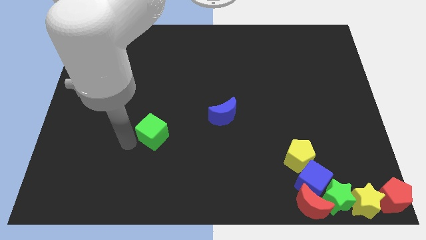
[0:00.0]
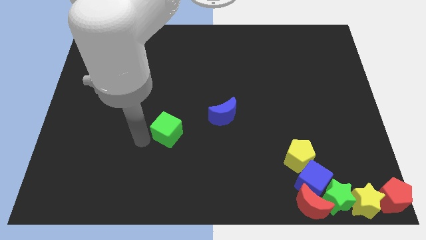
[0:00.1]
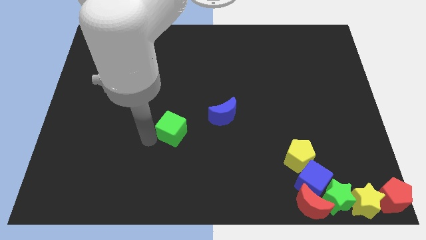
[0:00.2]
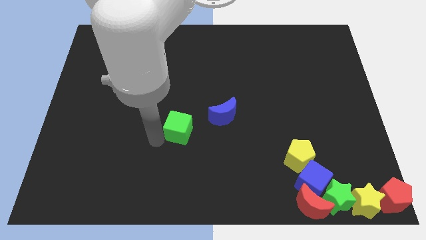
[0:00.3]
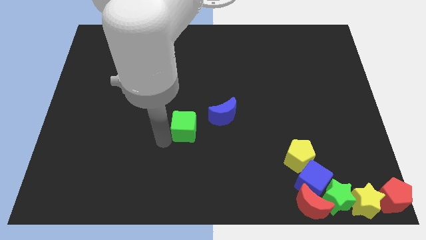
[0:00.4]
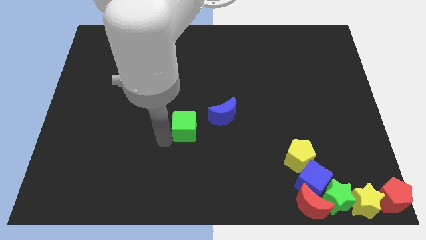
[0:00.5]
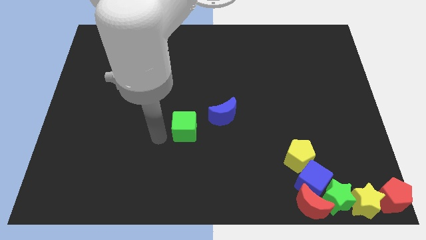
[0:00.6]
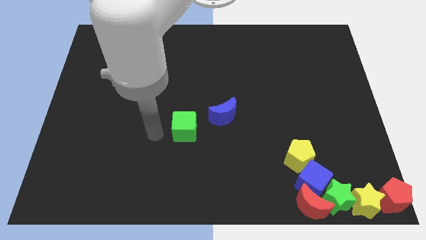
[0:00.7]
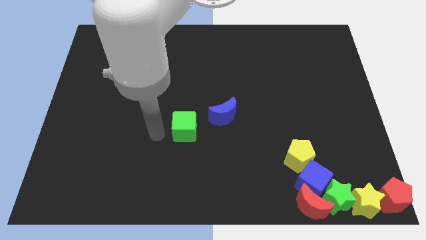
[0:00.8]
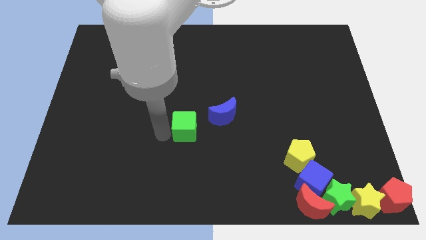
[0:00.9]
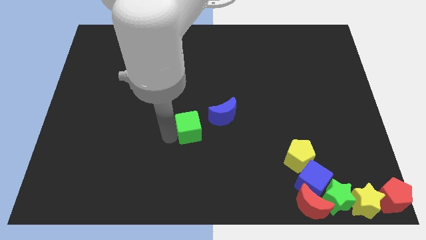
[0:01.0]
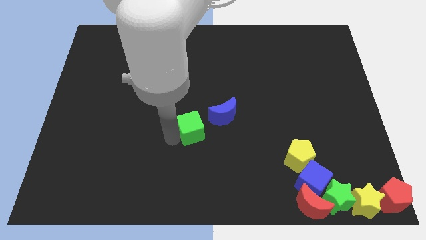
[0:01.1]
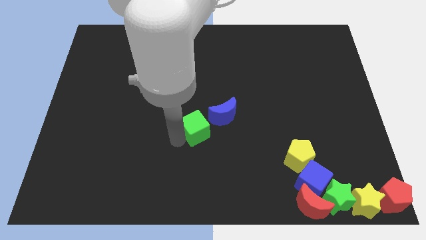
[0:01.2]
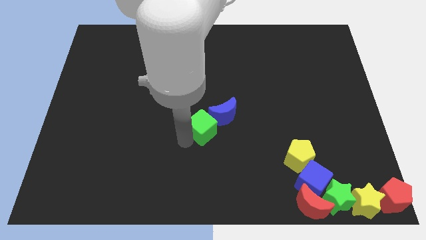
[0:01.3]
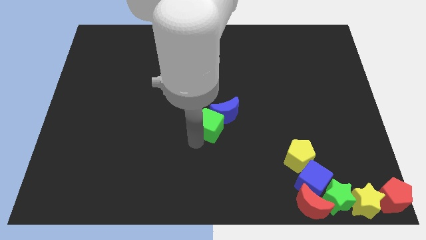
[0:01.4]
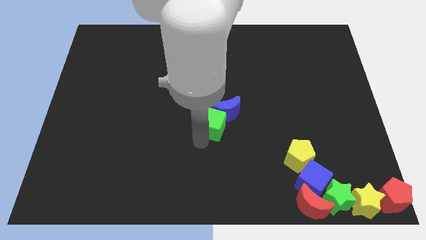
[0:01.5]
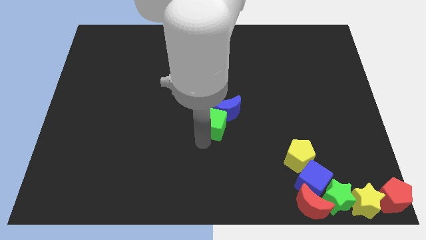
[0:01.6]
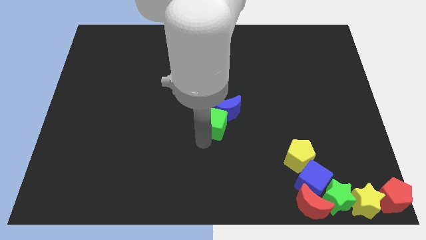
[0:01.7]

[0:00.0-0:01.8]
push the green cube into the blue moon

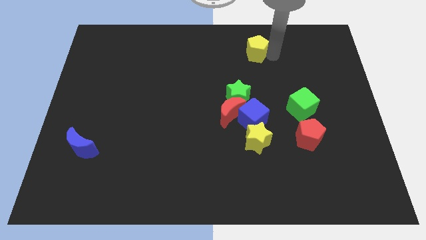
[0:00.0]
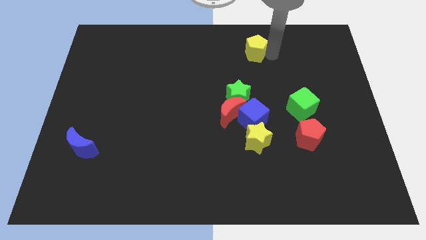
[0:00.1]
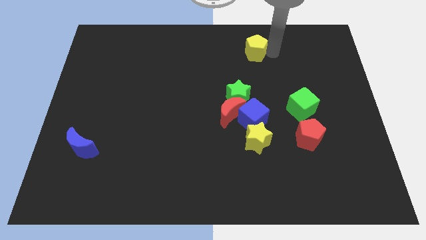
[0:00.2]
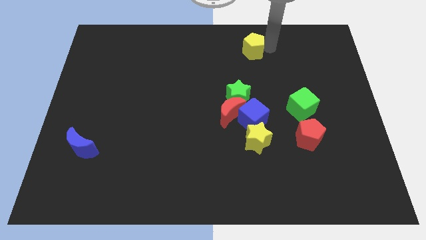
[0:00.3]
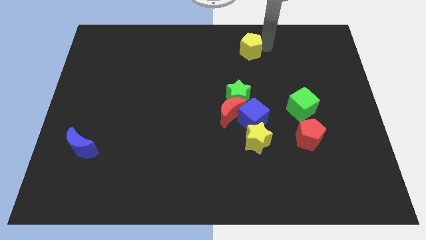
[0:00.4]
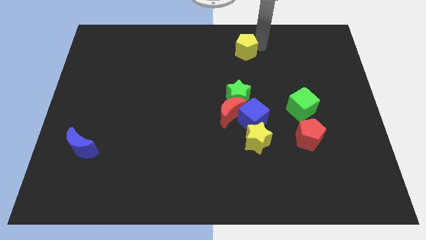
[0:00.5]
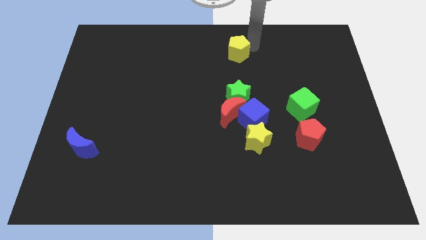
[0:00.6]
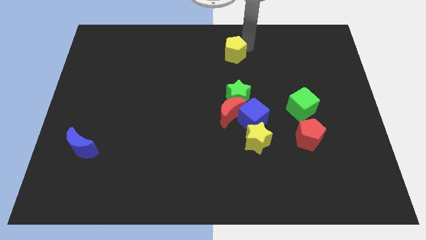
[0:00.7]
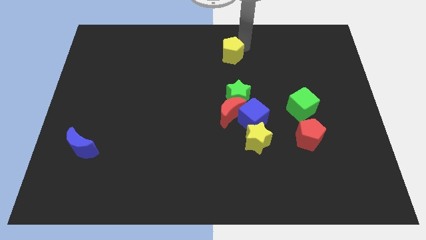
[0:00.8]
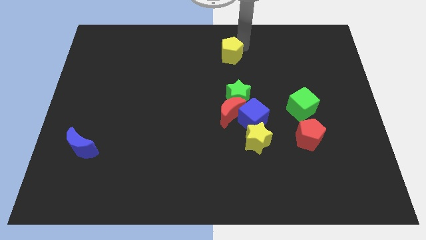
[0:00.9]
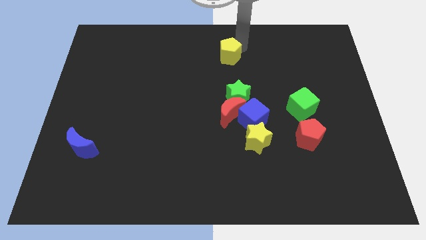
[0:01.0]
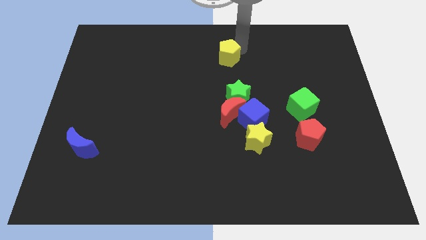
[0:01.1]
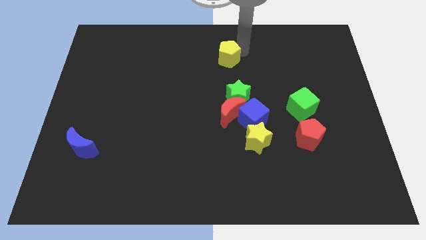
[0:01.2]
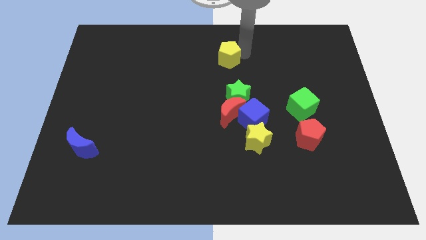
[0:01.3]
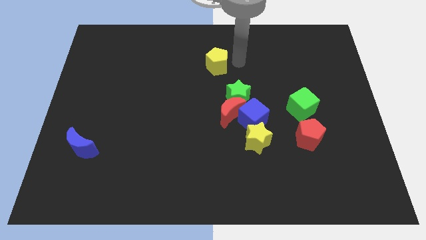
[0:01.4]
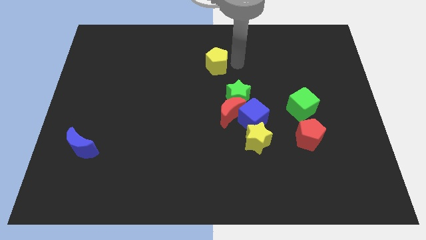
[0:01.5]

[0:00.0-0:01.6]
move the yellow pentagon at the top left side of the green star

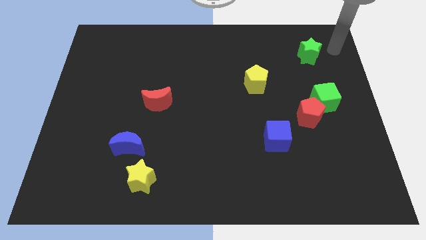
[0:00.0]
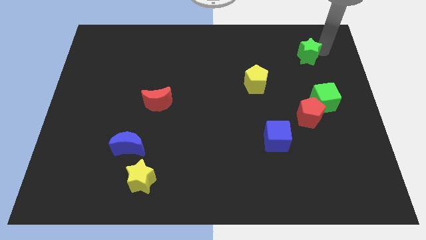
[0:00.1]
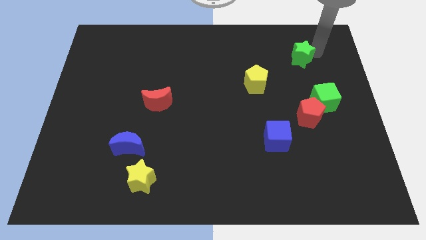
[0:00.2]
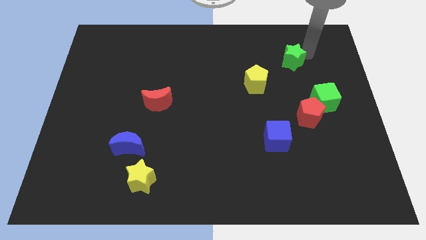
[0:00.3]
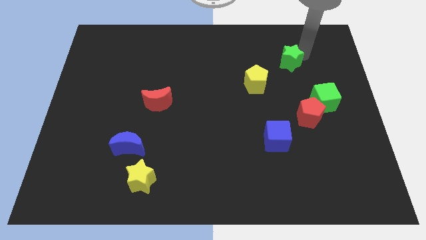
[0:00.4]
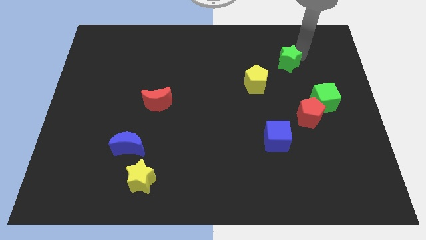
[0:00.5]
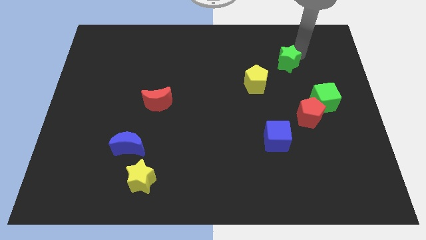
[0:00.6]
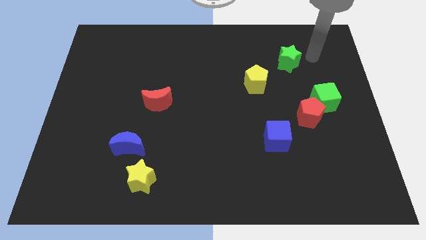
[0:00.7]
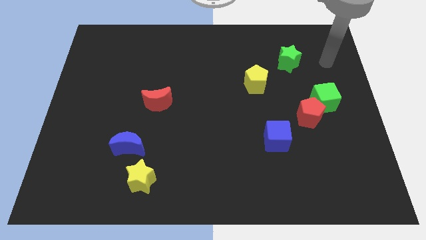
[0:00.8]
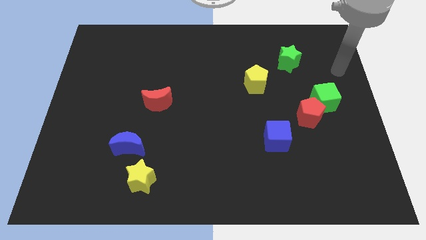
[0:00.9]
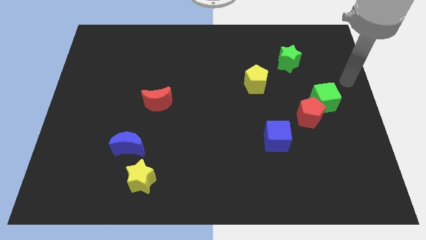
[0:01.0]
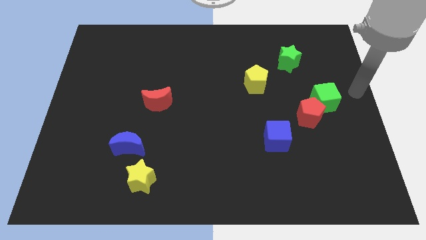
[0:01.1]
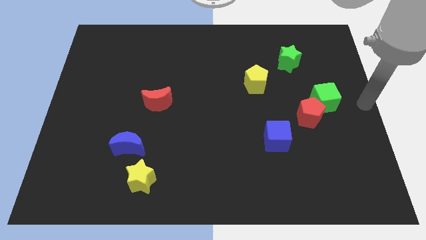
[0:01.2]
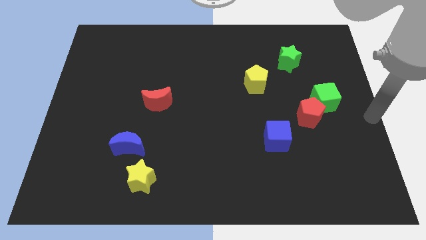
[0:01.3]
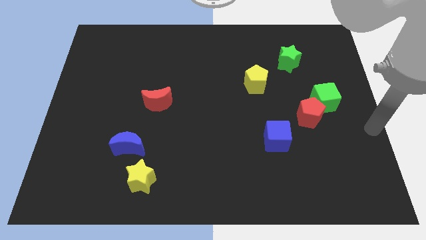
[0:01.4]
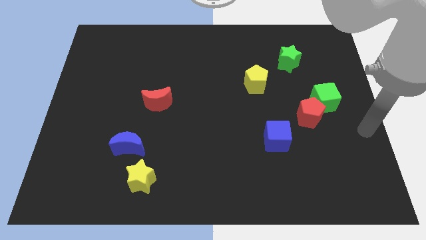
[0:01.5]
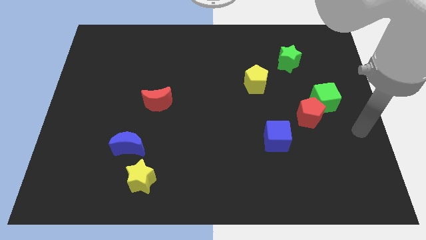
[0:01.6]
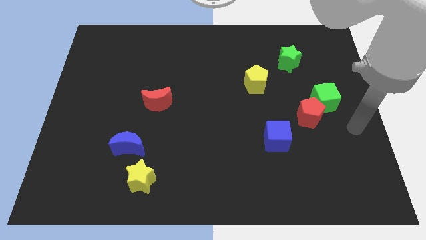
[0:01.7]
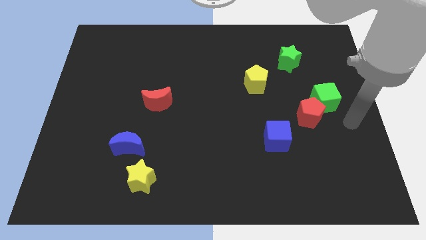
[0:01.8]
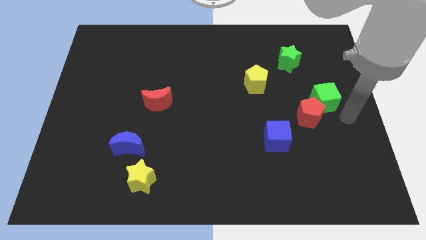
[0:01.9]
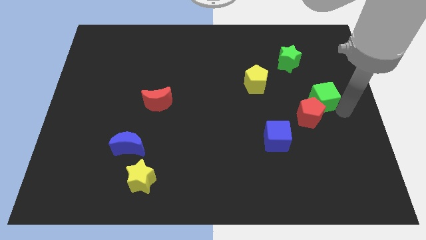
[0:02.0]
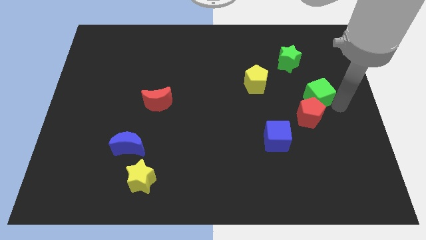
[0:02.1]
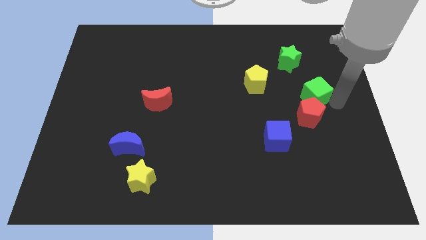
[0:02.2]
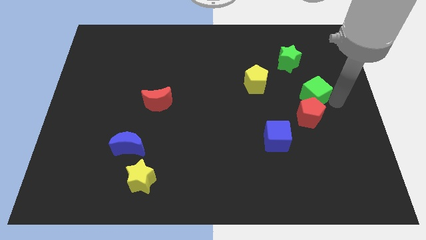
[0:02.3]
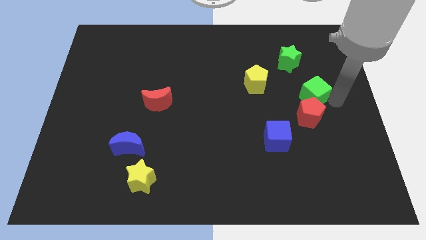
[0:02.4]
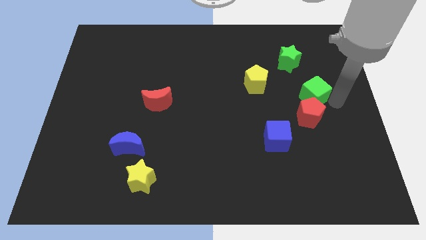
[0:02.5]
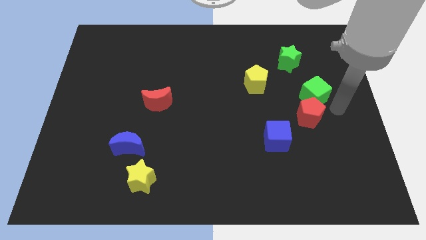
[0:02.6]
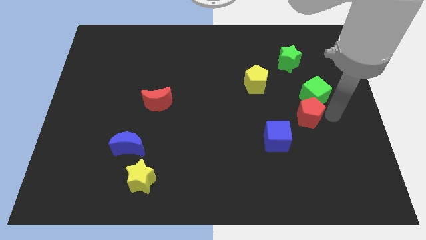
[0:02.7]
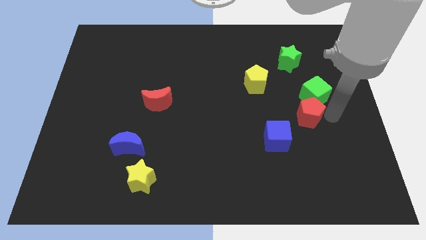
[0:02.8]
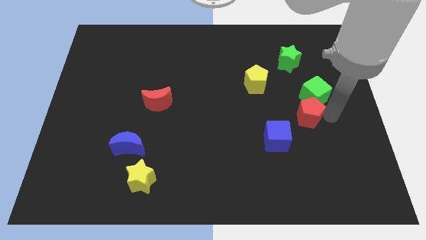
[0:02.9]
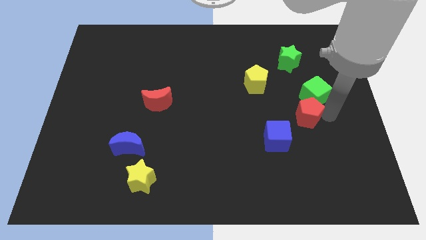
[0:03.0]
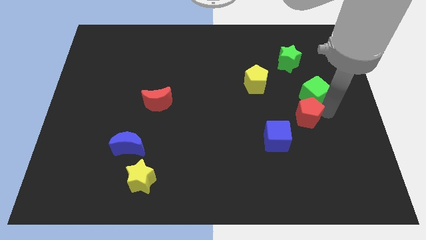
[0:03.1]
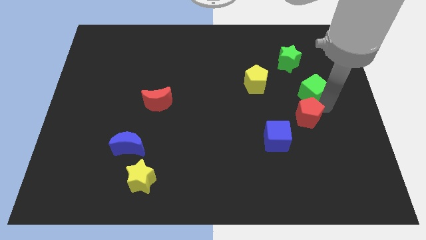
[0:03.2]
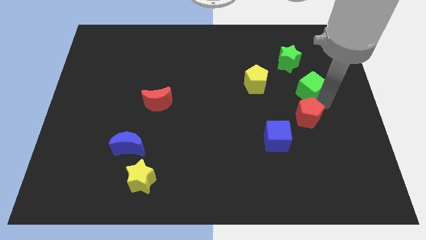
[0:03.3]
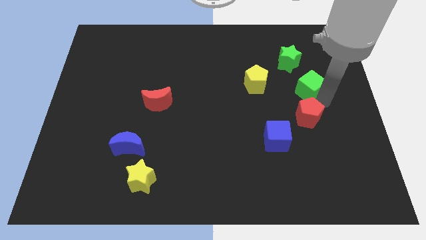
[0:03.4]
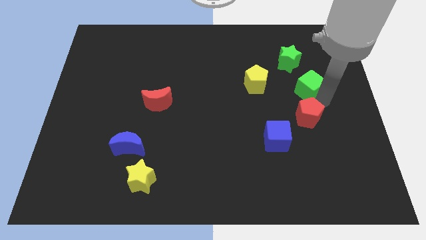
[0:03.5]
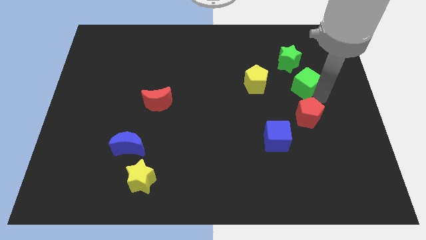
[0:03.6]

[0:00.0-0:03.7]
push the green cube above to the red pentagon

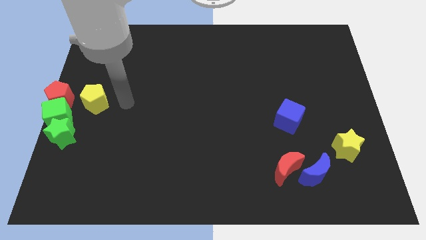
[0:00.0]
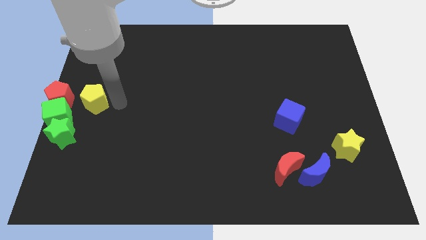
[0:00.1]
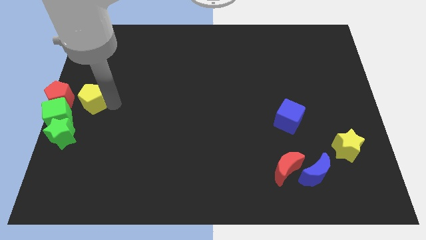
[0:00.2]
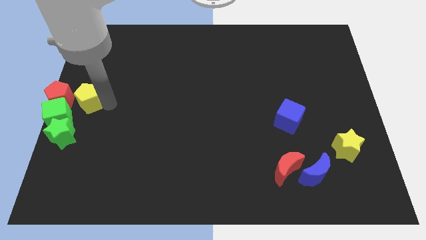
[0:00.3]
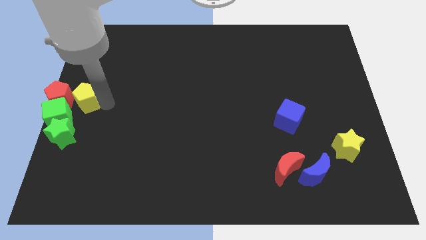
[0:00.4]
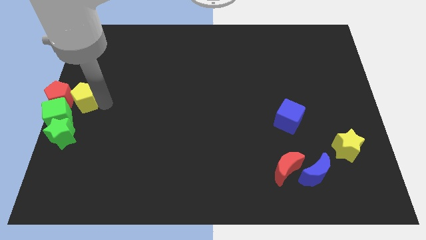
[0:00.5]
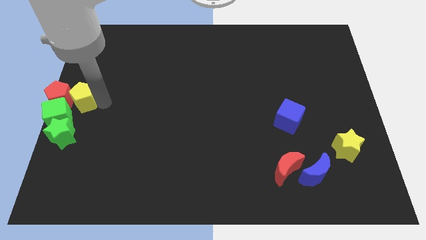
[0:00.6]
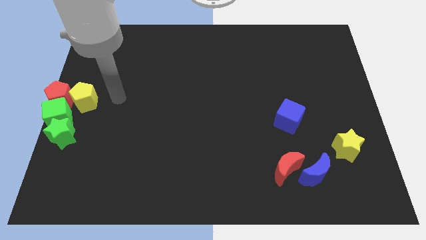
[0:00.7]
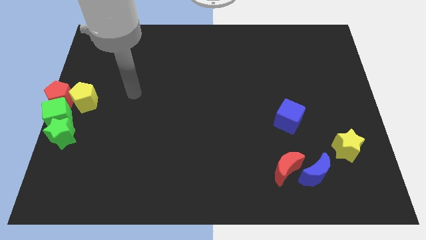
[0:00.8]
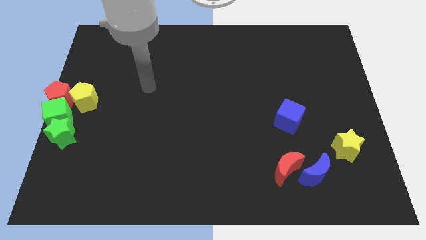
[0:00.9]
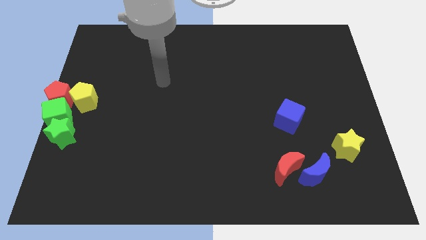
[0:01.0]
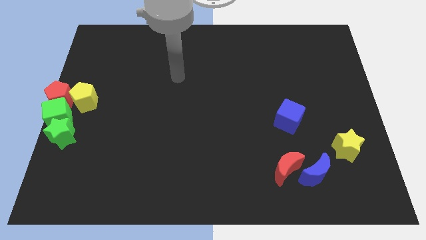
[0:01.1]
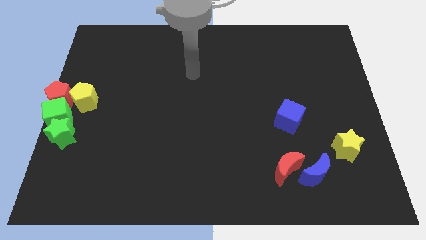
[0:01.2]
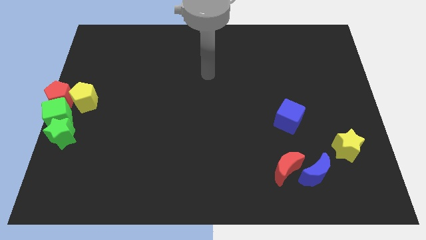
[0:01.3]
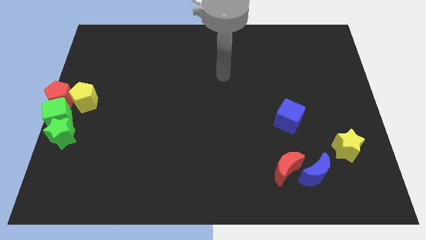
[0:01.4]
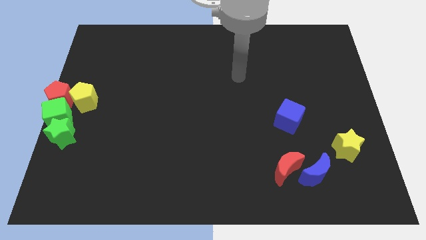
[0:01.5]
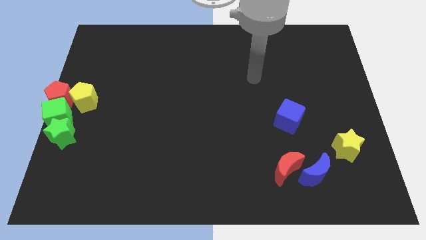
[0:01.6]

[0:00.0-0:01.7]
push the yellow pentagon into the red pentagon
